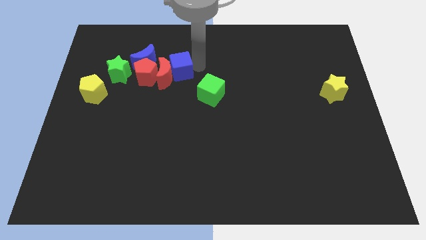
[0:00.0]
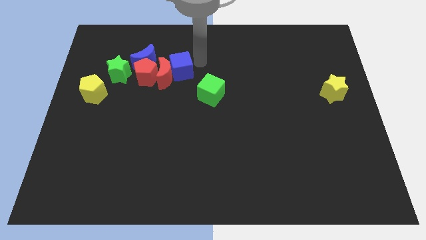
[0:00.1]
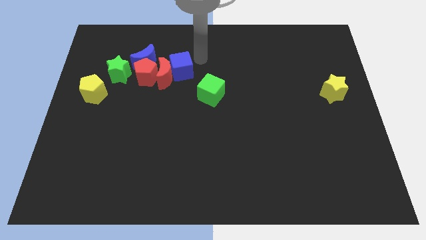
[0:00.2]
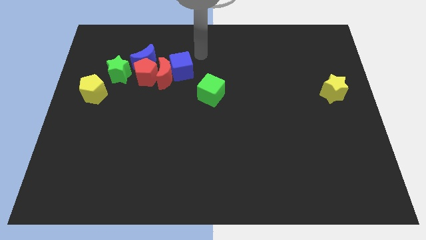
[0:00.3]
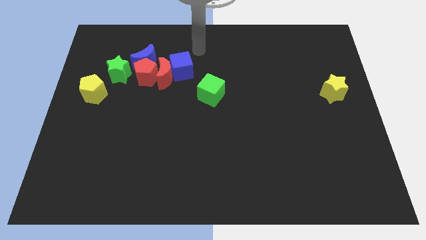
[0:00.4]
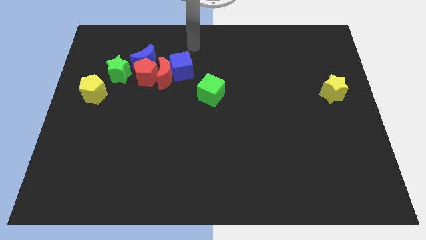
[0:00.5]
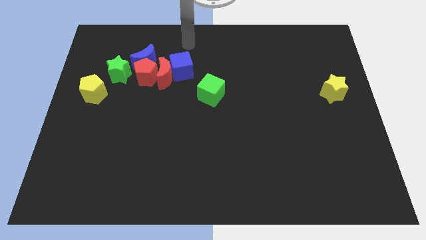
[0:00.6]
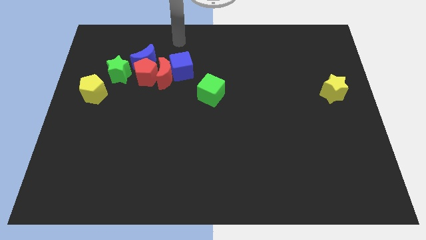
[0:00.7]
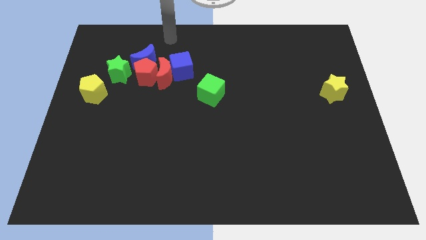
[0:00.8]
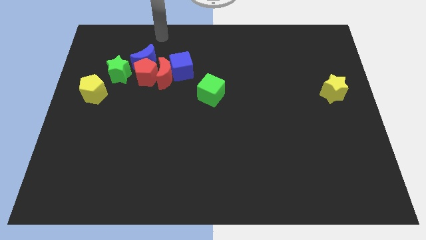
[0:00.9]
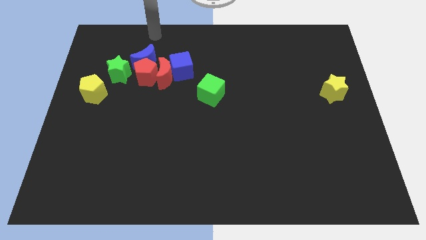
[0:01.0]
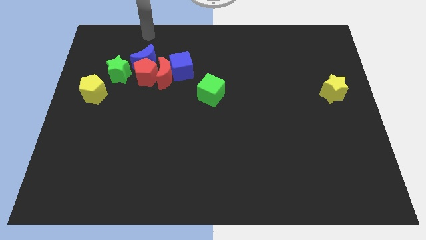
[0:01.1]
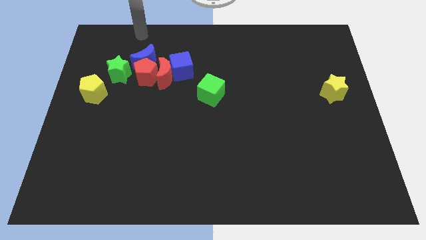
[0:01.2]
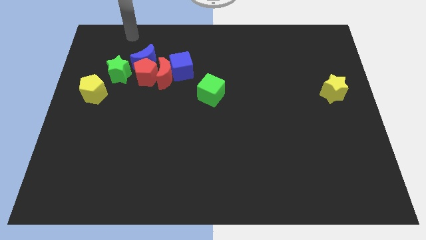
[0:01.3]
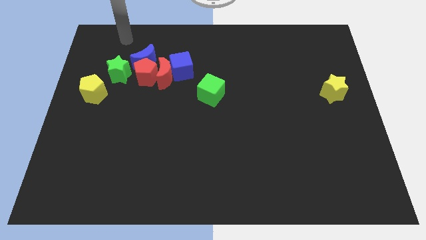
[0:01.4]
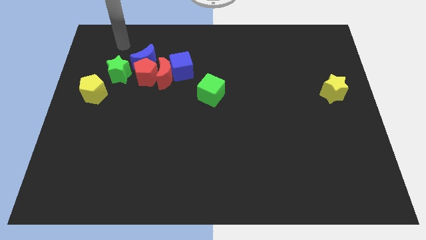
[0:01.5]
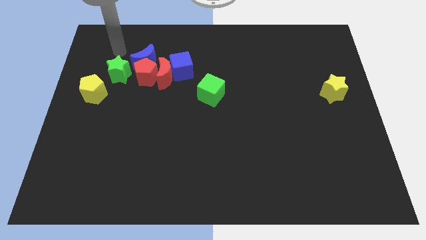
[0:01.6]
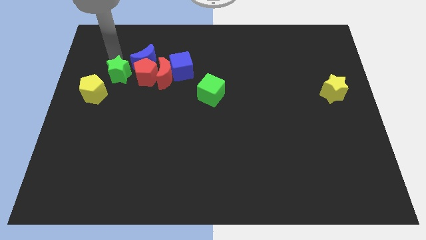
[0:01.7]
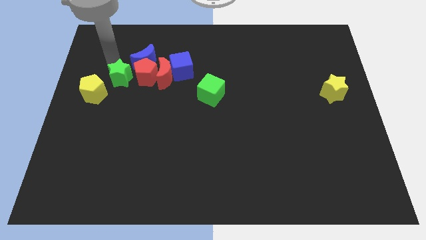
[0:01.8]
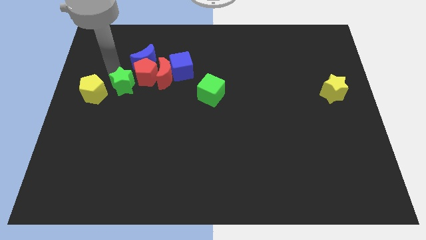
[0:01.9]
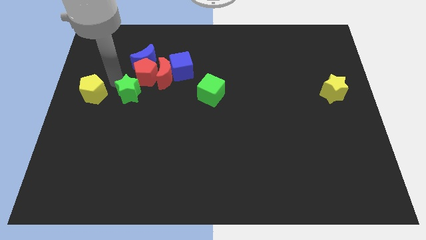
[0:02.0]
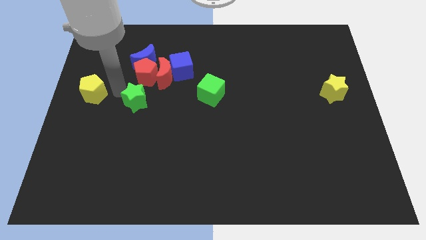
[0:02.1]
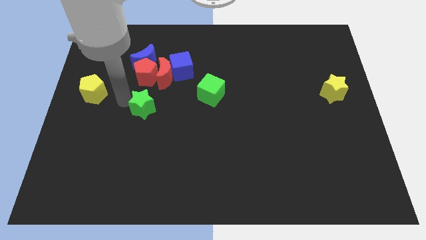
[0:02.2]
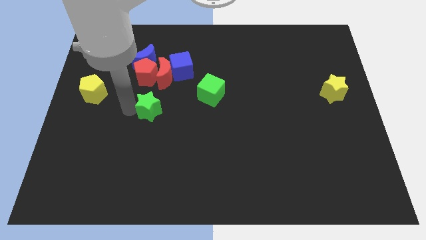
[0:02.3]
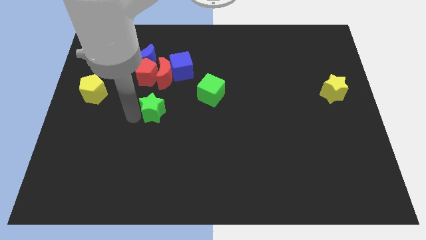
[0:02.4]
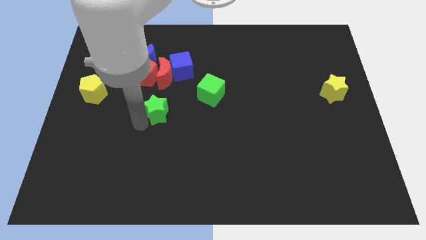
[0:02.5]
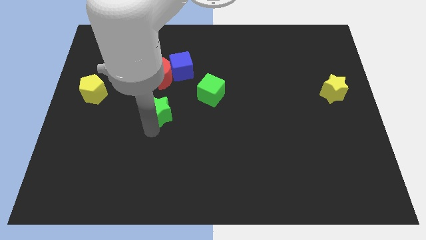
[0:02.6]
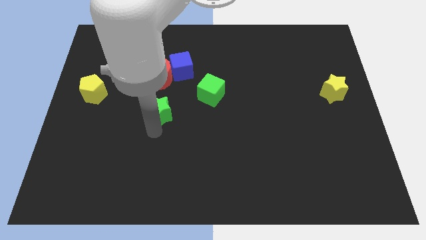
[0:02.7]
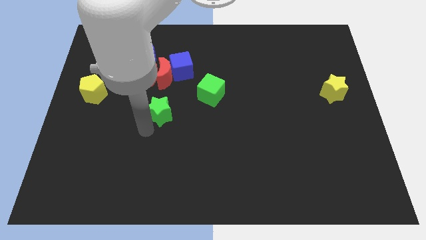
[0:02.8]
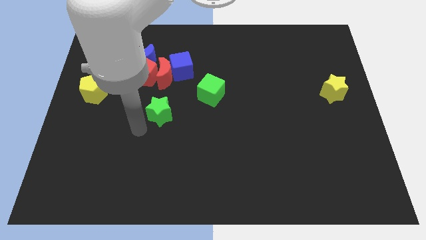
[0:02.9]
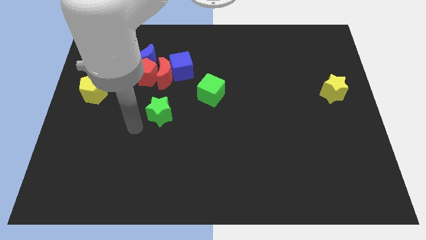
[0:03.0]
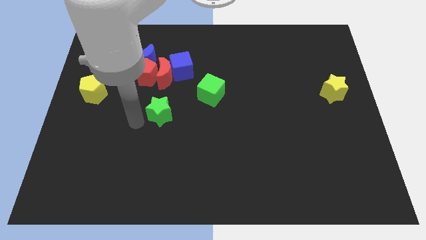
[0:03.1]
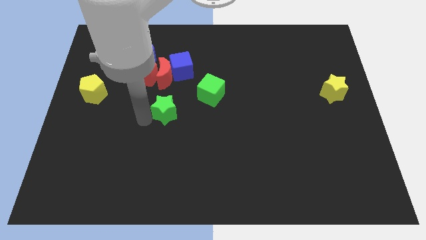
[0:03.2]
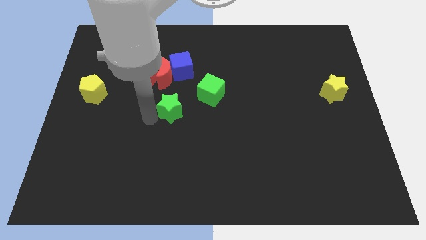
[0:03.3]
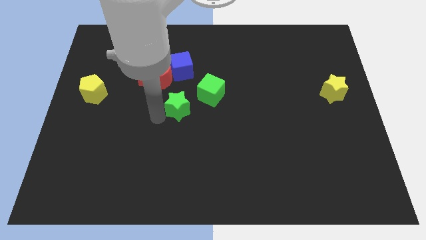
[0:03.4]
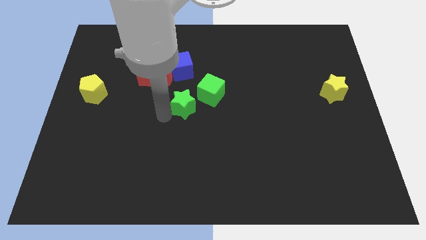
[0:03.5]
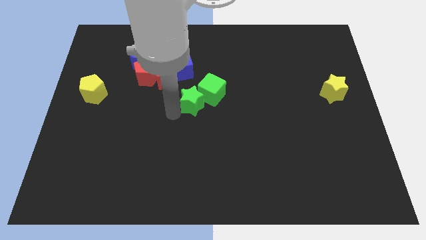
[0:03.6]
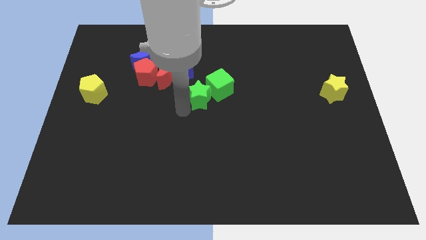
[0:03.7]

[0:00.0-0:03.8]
drag the green star into the left side of the green cube

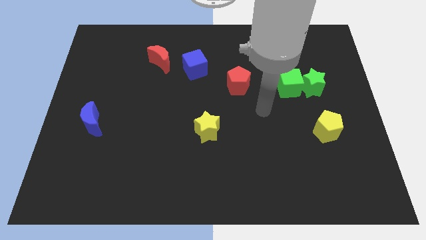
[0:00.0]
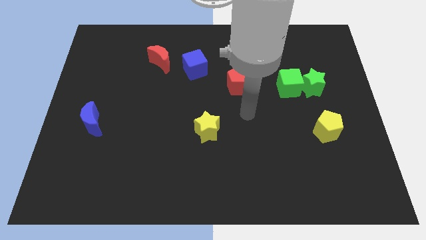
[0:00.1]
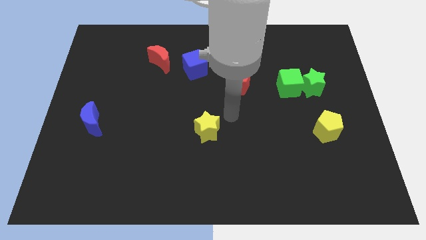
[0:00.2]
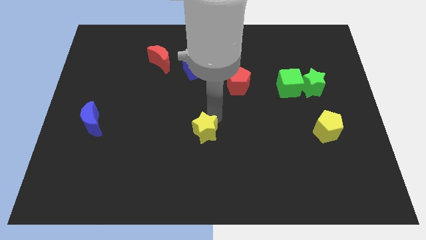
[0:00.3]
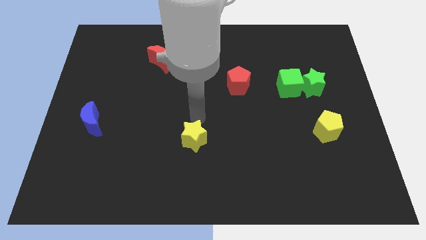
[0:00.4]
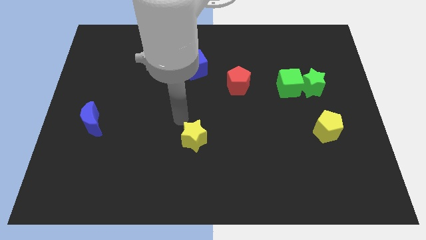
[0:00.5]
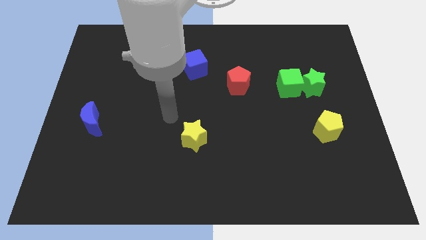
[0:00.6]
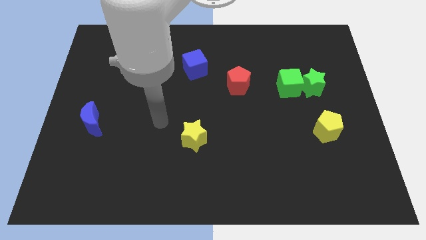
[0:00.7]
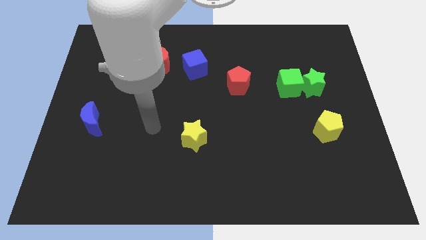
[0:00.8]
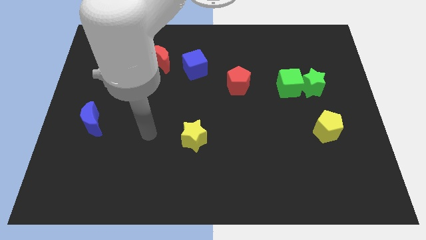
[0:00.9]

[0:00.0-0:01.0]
place your arm in between blue moon and yellow star

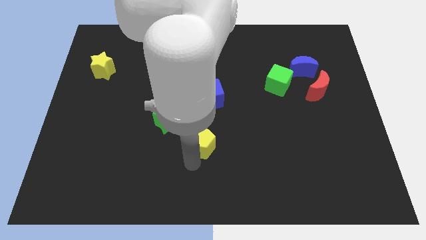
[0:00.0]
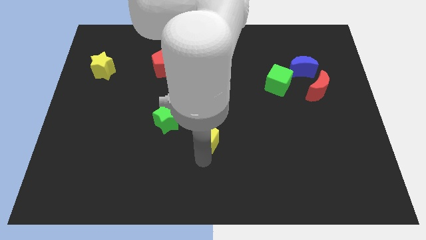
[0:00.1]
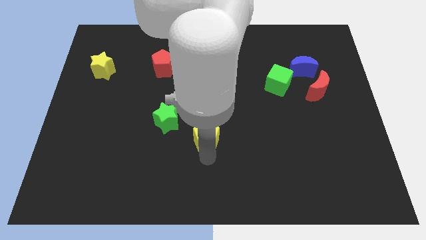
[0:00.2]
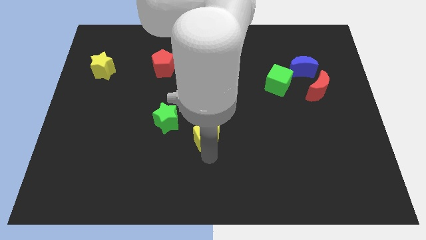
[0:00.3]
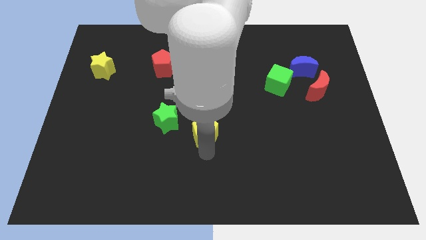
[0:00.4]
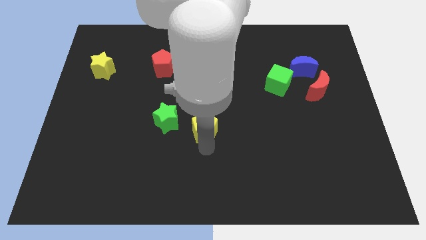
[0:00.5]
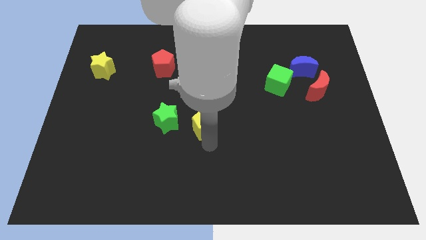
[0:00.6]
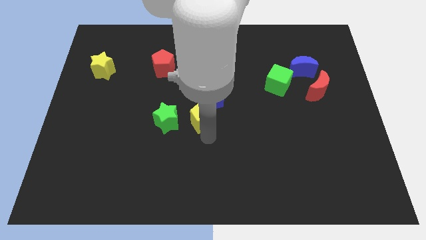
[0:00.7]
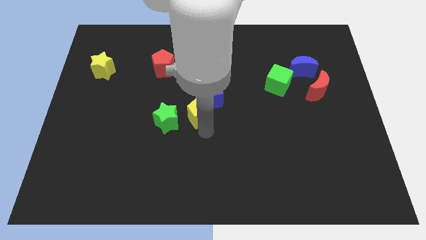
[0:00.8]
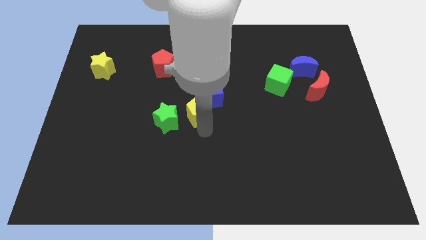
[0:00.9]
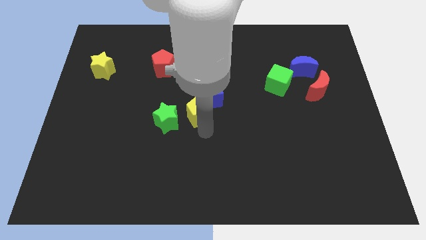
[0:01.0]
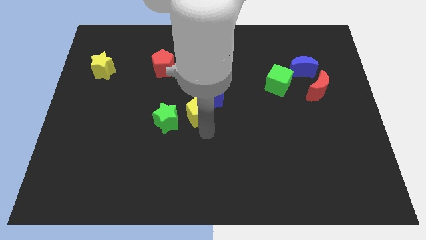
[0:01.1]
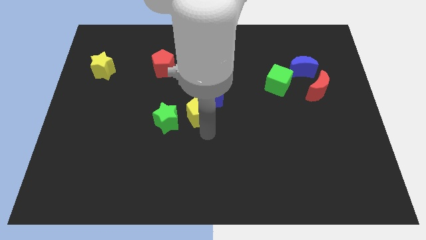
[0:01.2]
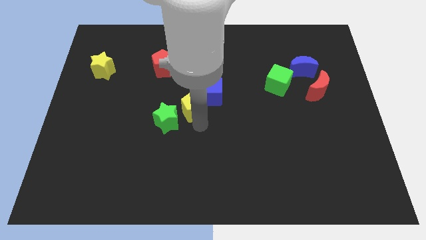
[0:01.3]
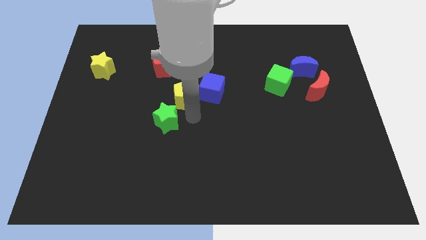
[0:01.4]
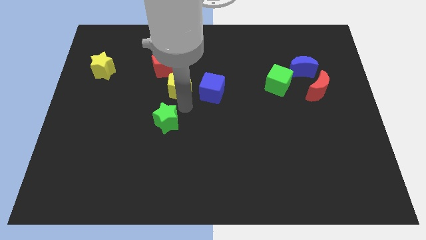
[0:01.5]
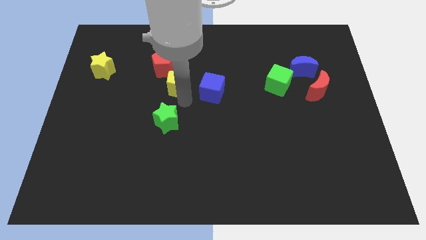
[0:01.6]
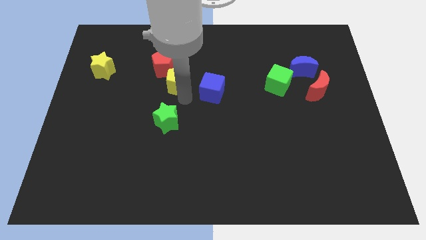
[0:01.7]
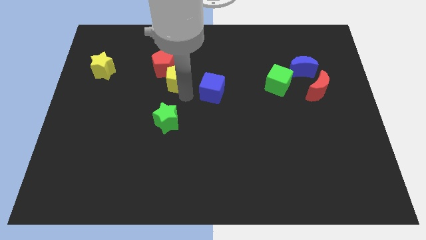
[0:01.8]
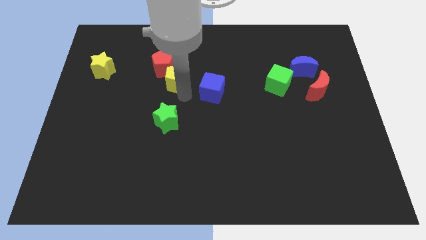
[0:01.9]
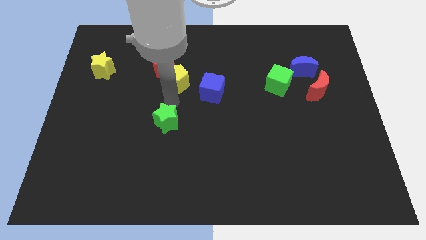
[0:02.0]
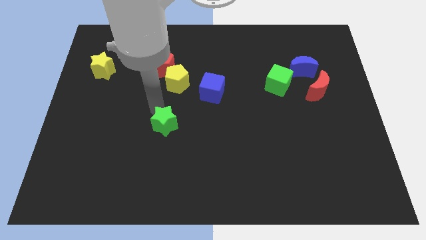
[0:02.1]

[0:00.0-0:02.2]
push the yellow pentagon to the bottom right side of red pentagon

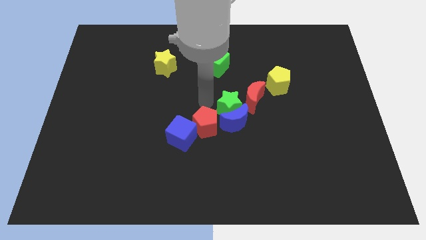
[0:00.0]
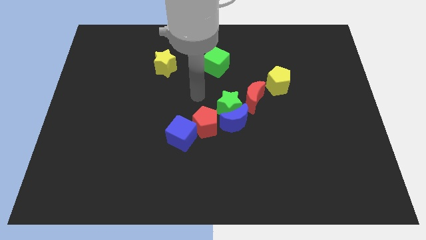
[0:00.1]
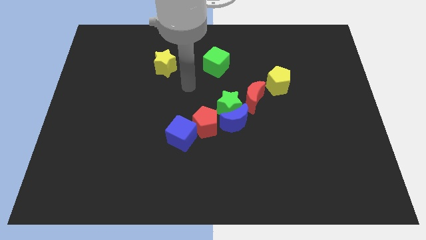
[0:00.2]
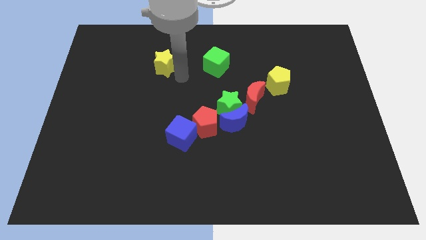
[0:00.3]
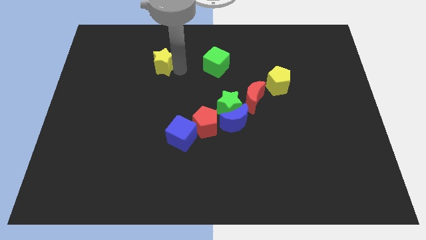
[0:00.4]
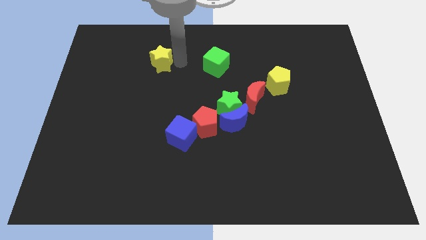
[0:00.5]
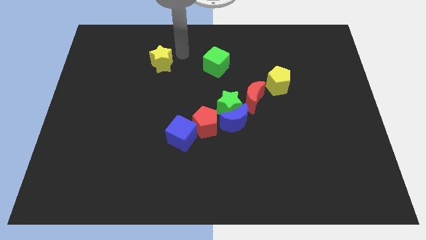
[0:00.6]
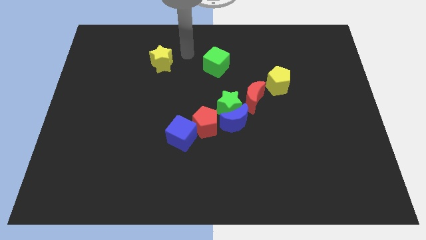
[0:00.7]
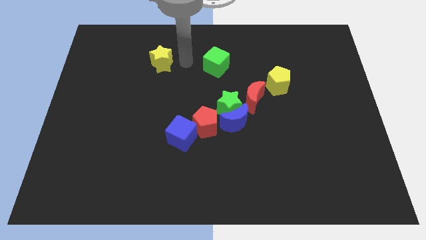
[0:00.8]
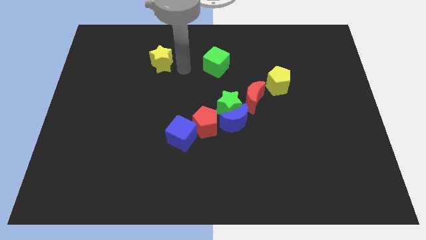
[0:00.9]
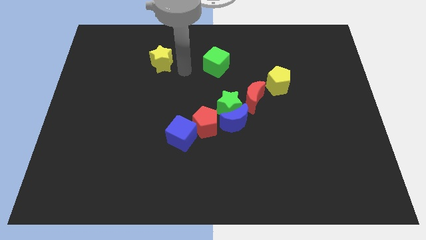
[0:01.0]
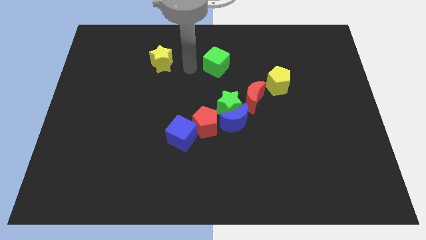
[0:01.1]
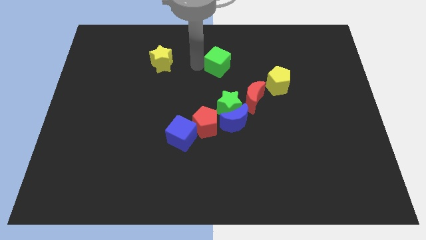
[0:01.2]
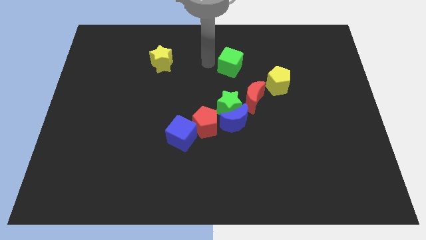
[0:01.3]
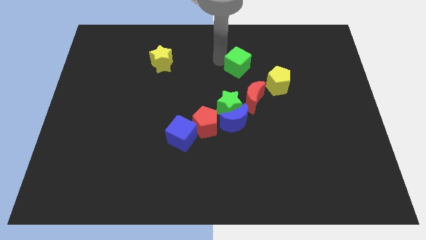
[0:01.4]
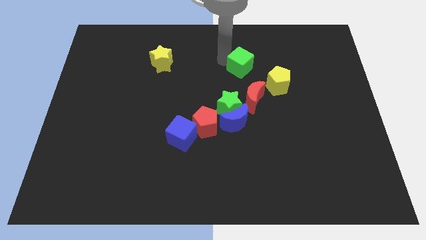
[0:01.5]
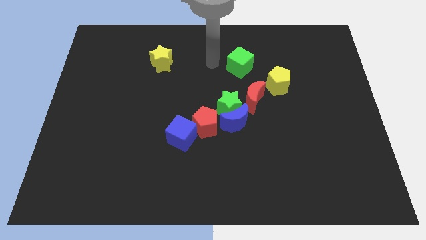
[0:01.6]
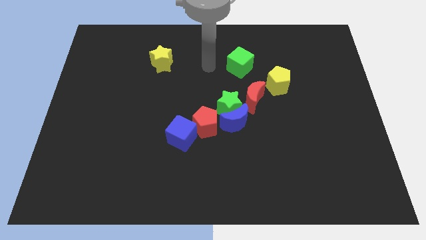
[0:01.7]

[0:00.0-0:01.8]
move the green cube towards the yellow pentagon
